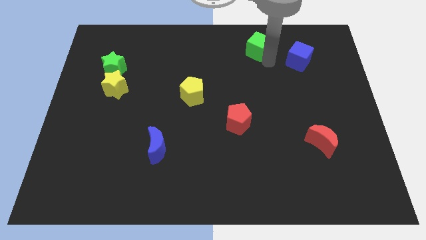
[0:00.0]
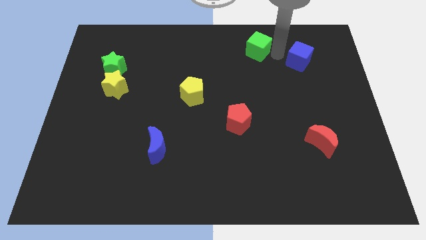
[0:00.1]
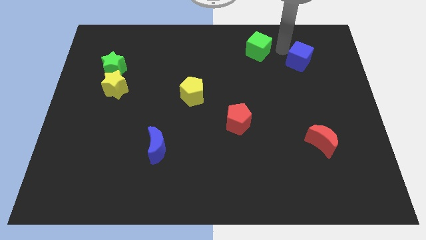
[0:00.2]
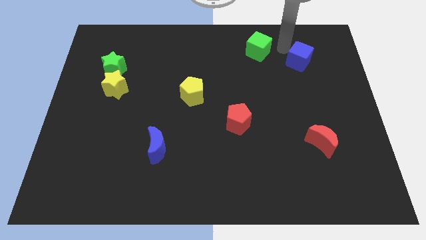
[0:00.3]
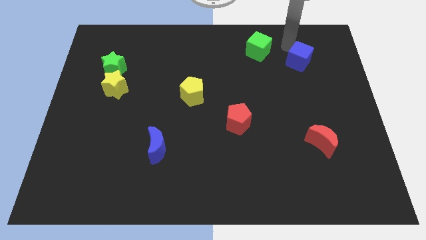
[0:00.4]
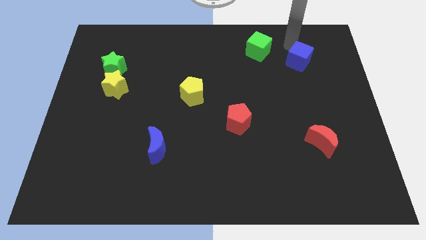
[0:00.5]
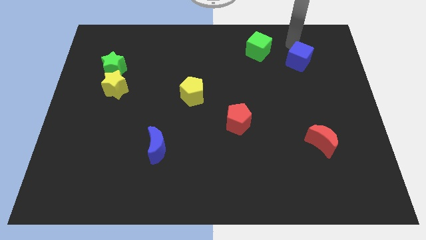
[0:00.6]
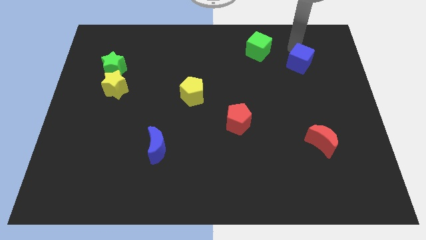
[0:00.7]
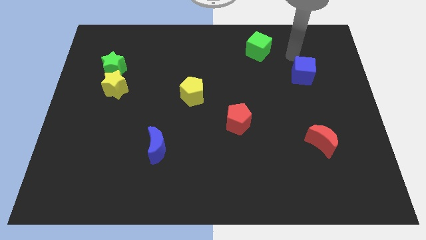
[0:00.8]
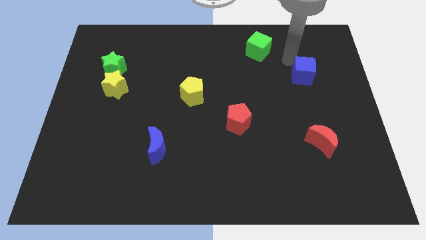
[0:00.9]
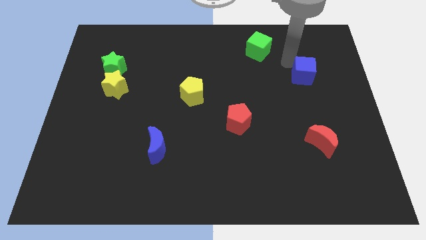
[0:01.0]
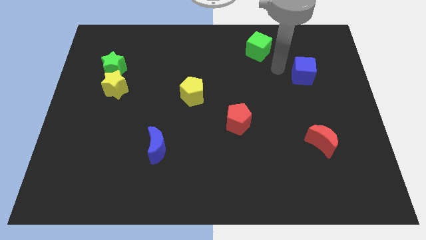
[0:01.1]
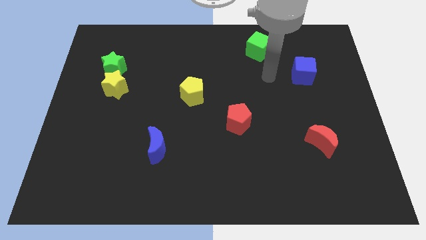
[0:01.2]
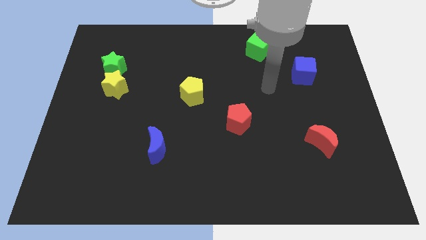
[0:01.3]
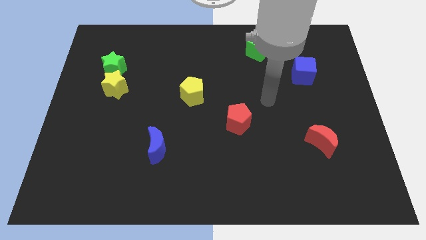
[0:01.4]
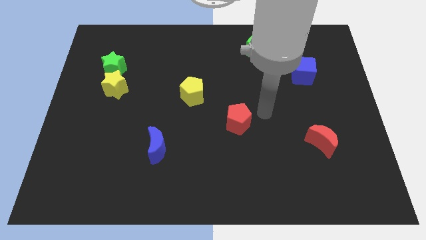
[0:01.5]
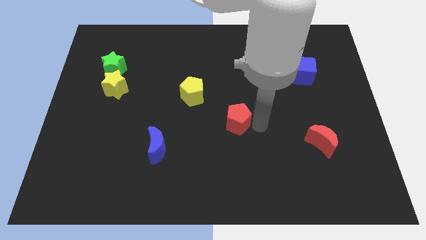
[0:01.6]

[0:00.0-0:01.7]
move your arm away from the green cube

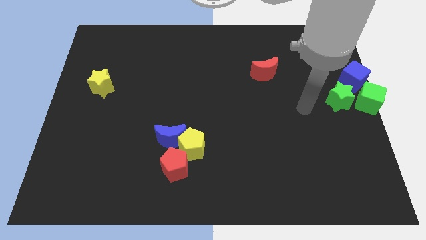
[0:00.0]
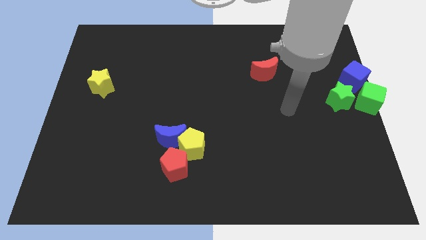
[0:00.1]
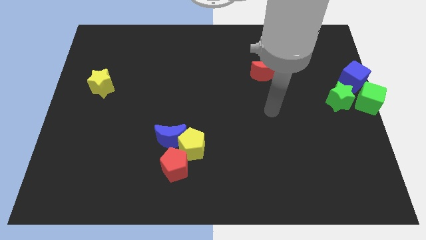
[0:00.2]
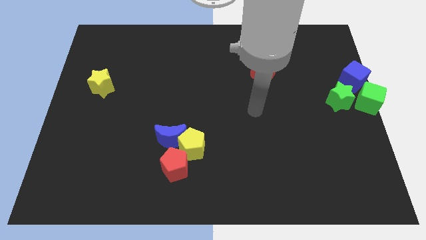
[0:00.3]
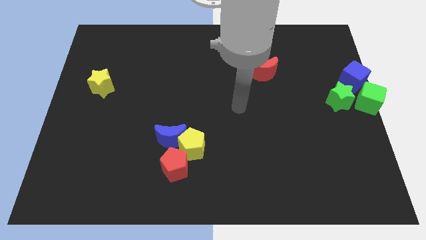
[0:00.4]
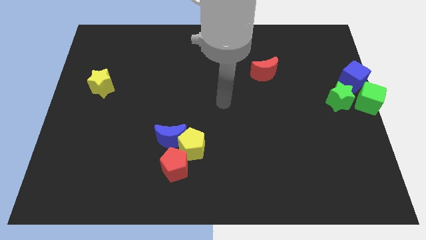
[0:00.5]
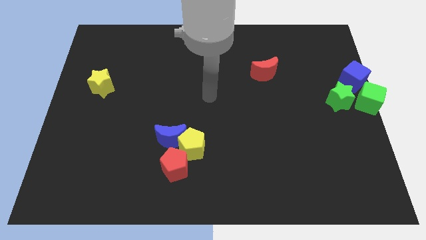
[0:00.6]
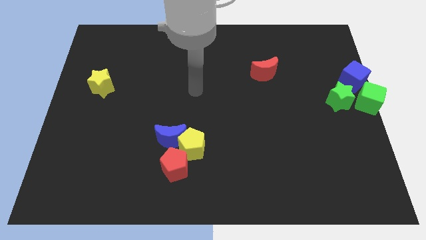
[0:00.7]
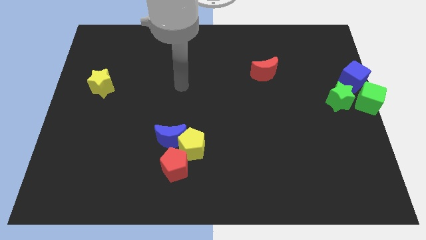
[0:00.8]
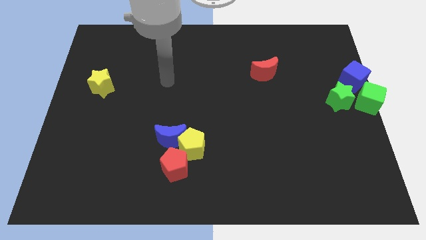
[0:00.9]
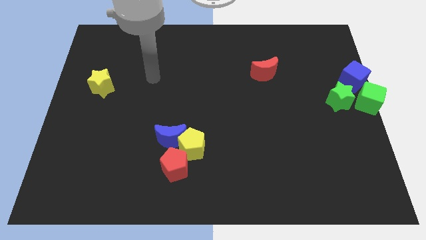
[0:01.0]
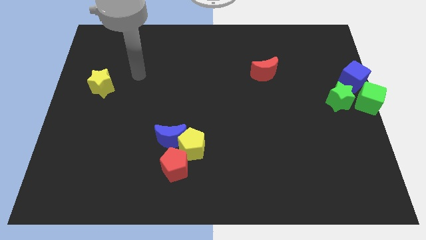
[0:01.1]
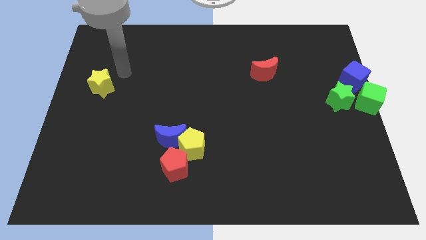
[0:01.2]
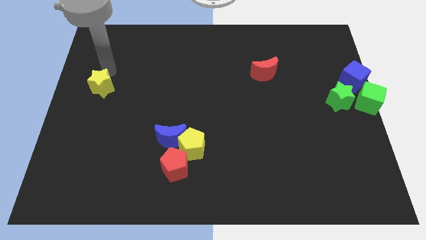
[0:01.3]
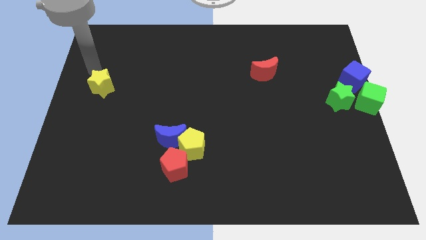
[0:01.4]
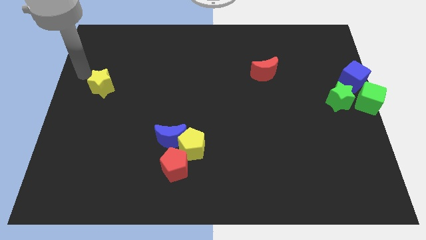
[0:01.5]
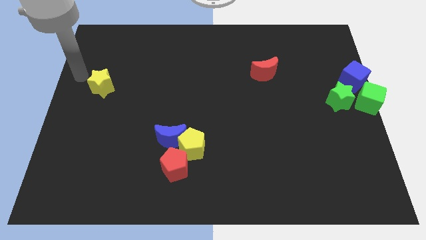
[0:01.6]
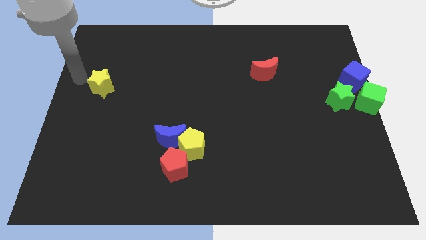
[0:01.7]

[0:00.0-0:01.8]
move your arm to the left of the yellow star

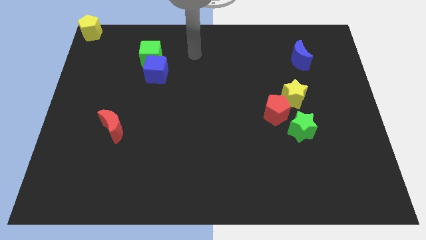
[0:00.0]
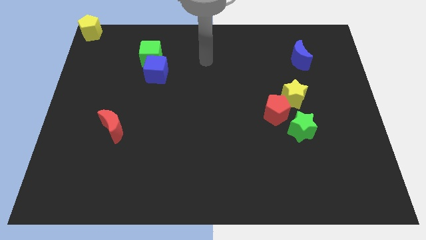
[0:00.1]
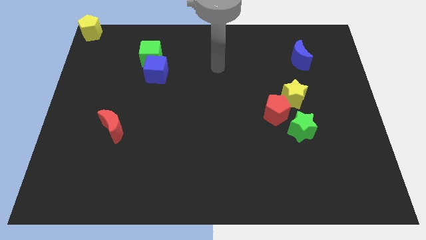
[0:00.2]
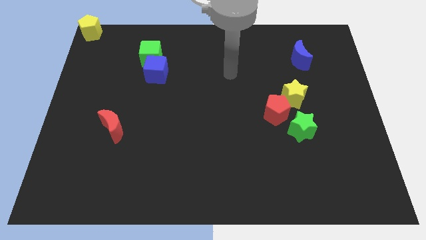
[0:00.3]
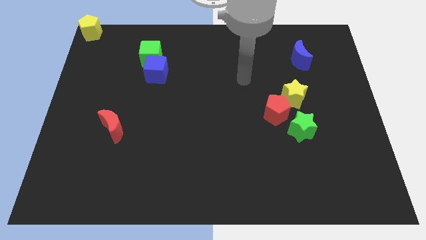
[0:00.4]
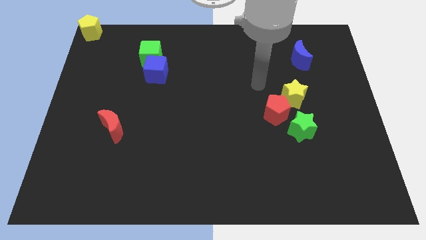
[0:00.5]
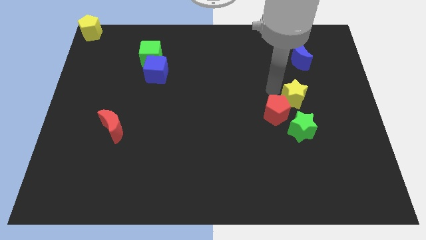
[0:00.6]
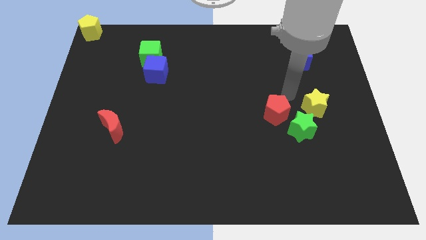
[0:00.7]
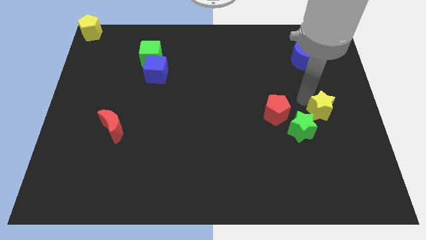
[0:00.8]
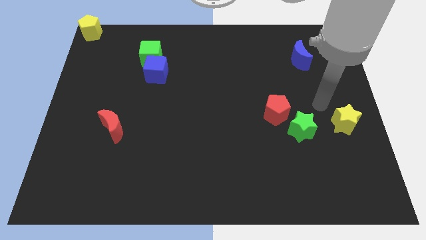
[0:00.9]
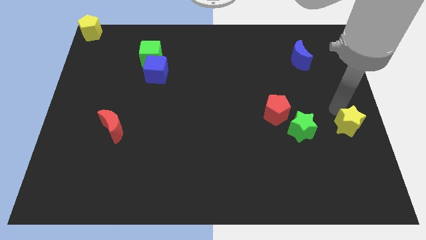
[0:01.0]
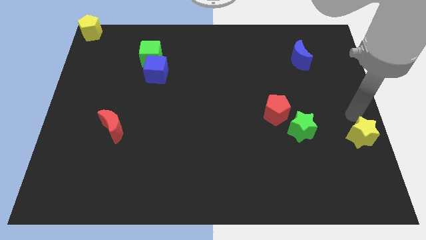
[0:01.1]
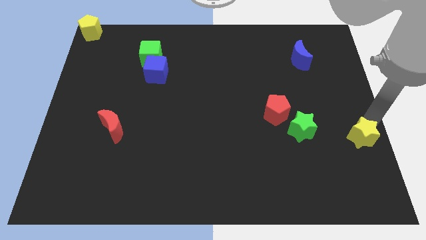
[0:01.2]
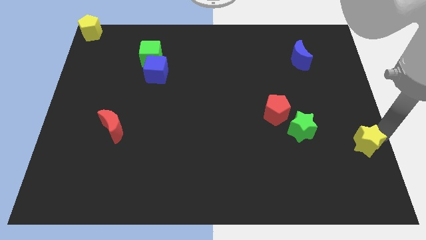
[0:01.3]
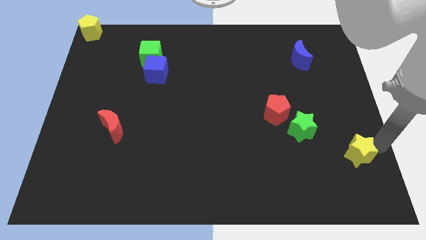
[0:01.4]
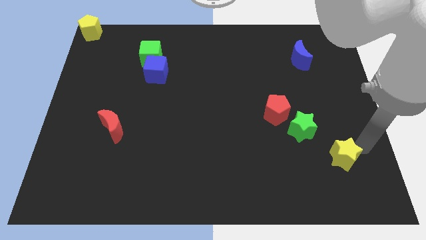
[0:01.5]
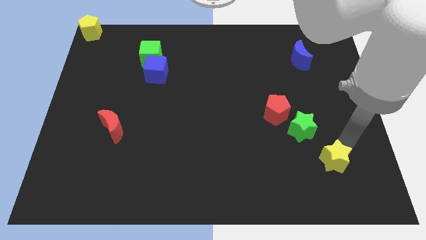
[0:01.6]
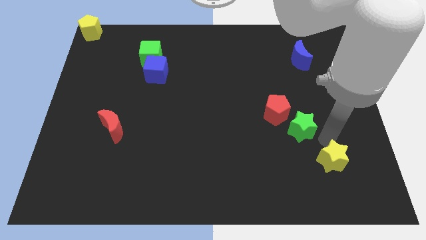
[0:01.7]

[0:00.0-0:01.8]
move the yellow star diagonal bottom right to the green star

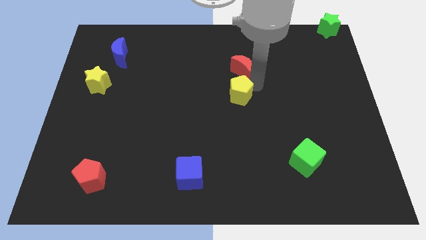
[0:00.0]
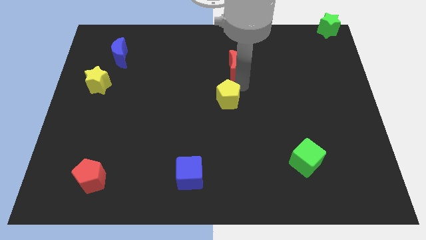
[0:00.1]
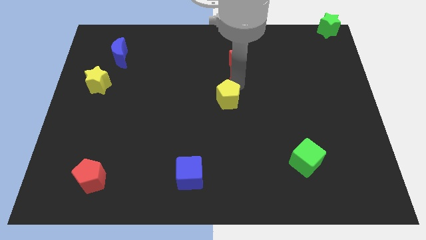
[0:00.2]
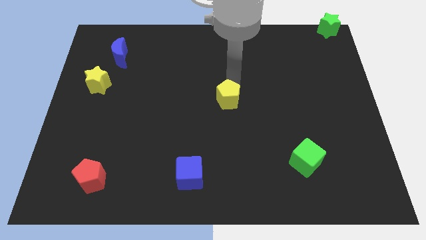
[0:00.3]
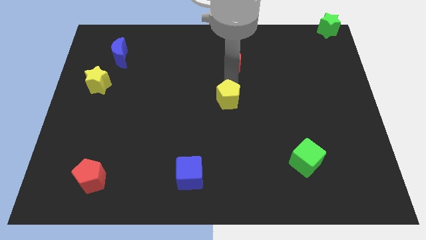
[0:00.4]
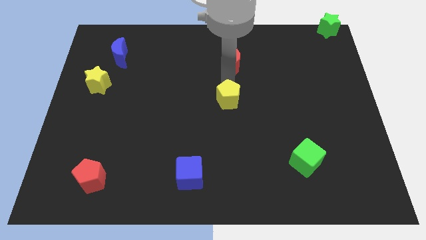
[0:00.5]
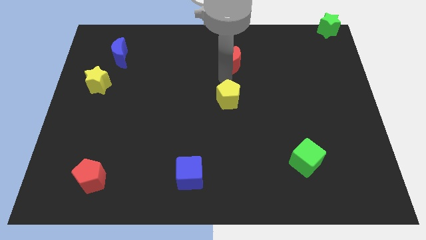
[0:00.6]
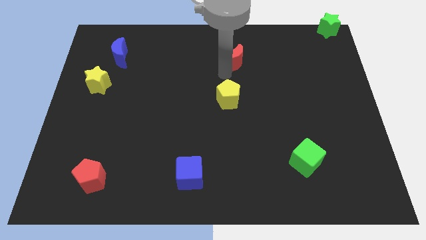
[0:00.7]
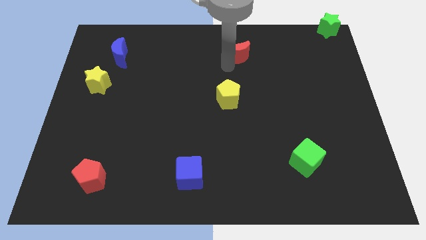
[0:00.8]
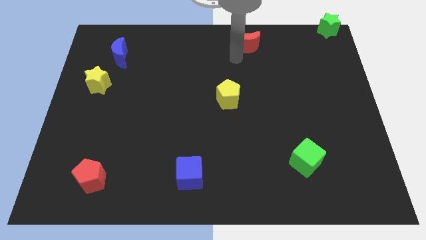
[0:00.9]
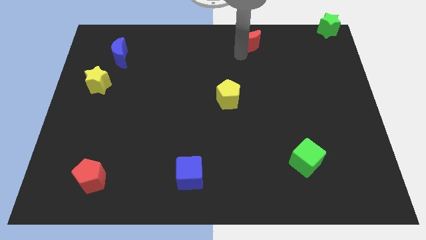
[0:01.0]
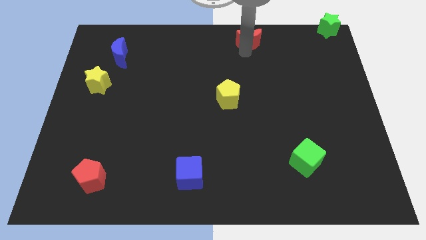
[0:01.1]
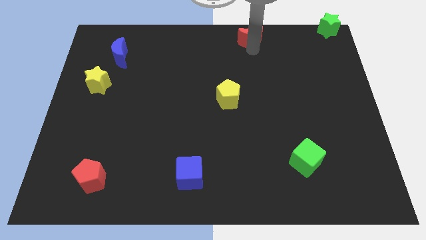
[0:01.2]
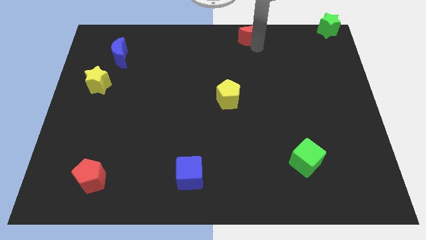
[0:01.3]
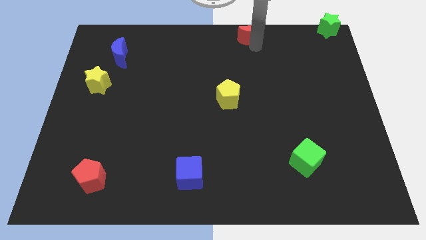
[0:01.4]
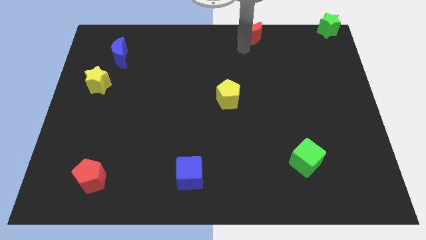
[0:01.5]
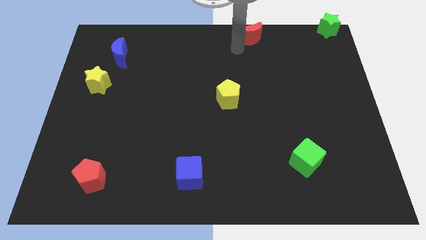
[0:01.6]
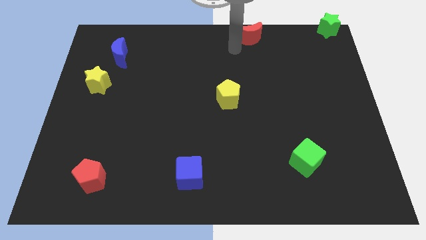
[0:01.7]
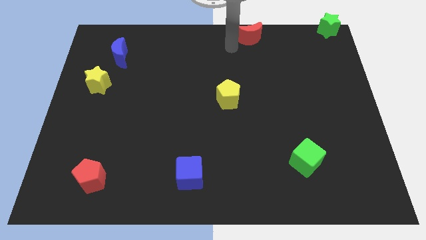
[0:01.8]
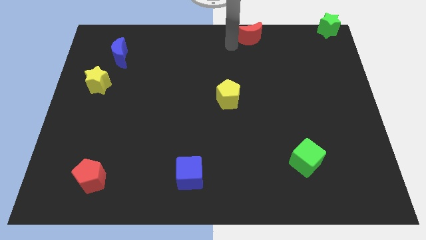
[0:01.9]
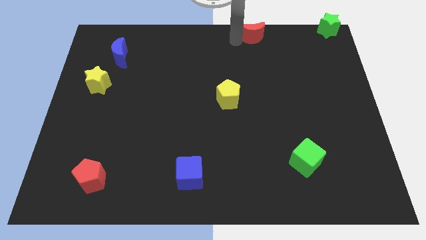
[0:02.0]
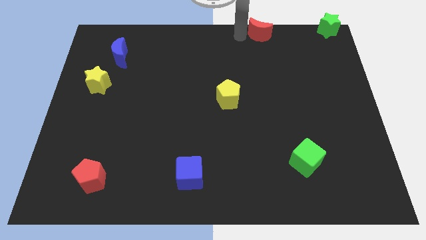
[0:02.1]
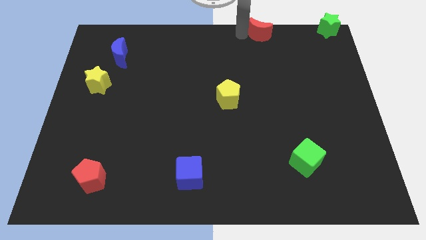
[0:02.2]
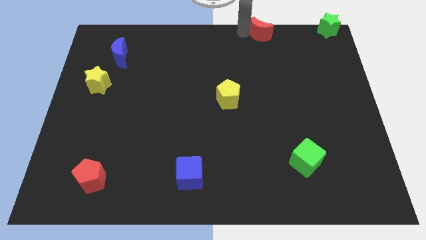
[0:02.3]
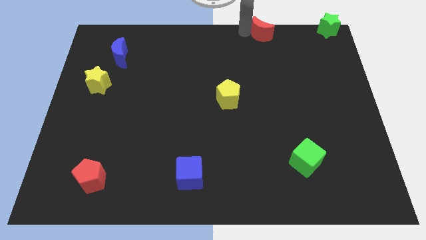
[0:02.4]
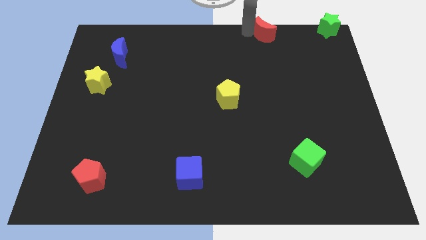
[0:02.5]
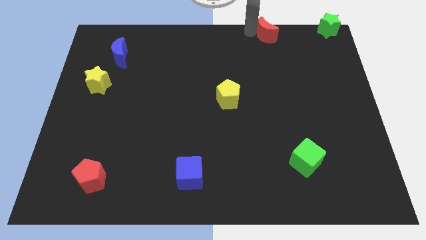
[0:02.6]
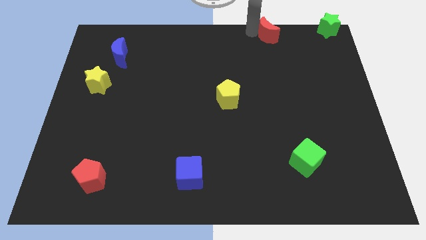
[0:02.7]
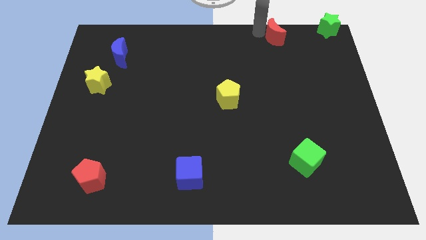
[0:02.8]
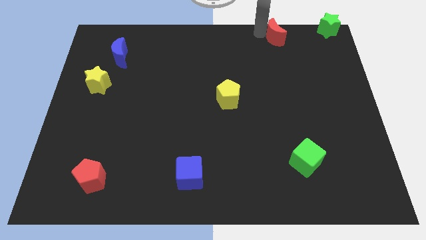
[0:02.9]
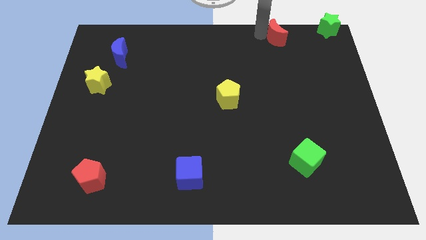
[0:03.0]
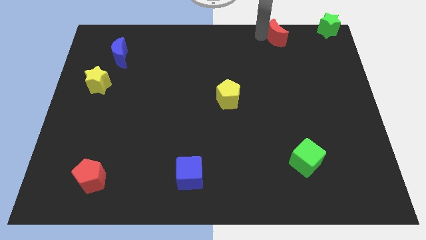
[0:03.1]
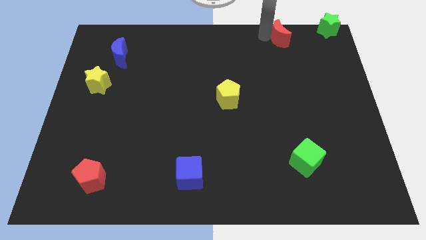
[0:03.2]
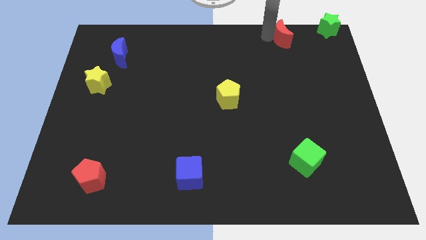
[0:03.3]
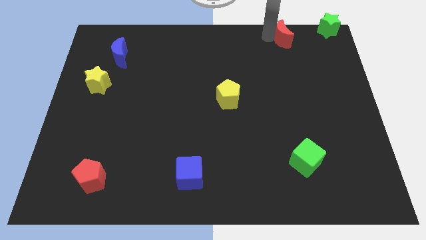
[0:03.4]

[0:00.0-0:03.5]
move the red moon away from the yellow pentagon

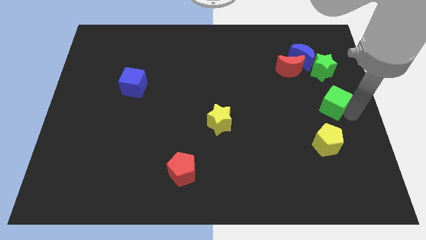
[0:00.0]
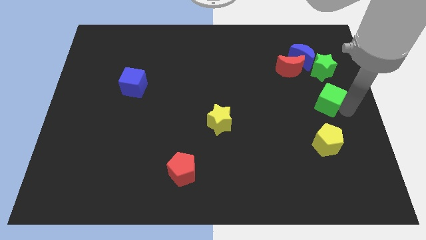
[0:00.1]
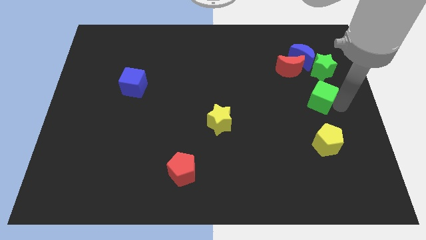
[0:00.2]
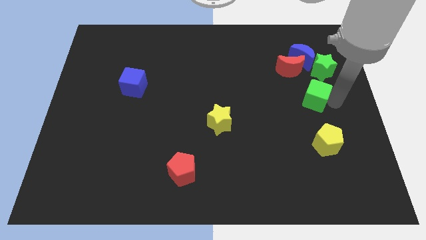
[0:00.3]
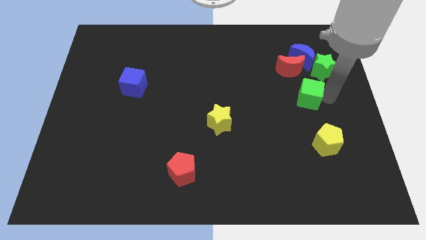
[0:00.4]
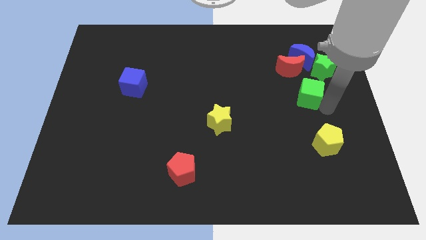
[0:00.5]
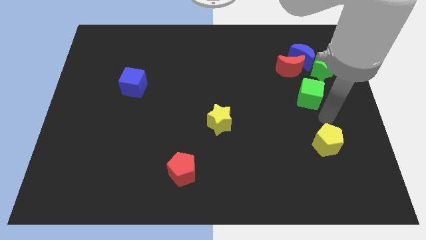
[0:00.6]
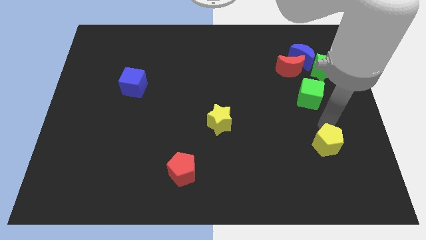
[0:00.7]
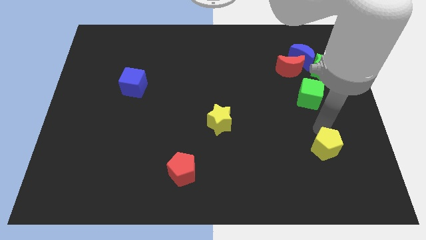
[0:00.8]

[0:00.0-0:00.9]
place the green cube below the red moon
